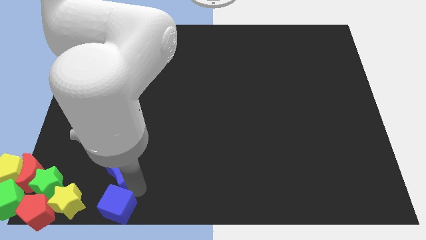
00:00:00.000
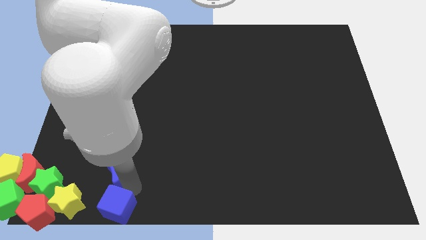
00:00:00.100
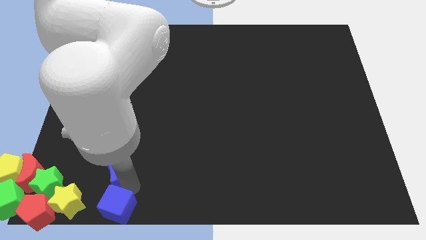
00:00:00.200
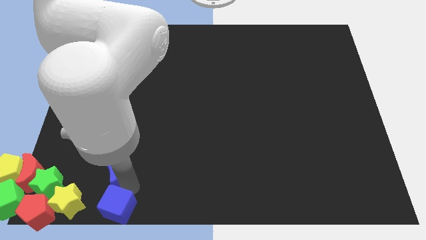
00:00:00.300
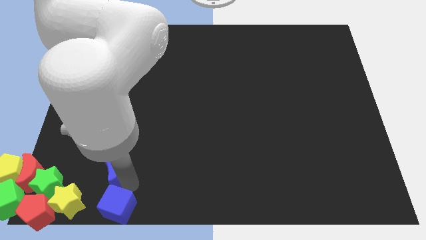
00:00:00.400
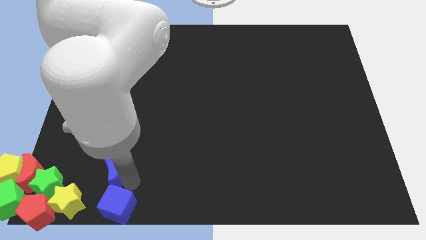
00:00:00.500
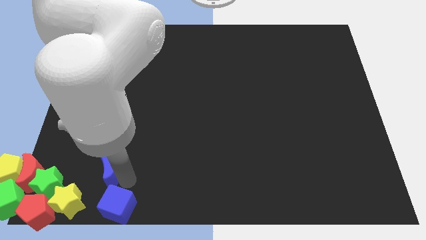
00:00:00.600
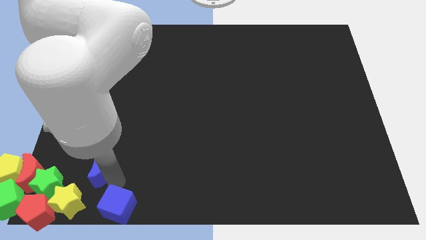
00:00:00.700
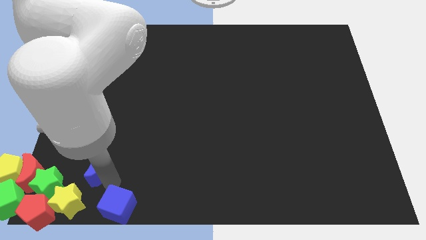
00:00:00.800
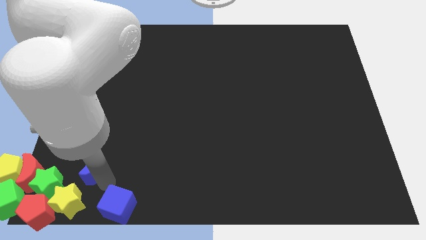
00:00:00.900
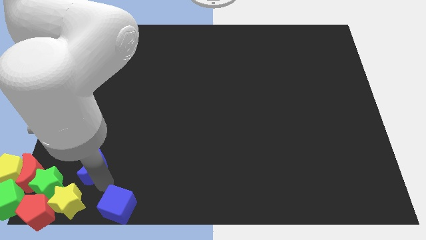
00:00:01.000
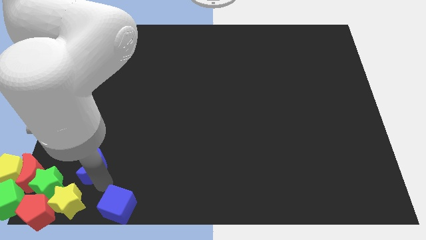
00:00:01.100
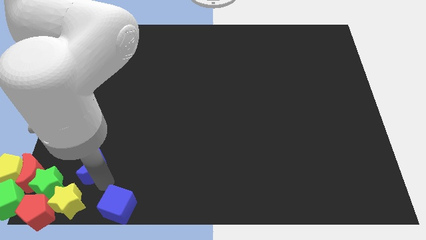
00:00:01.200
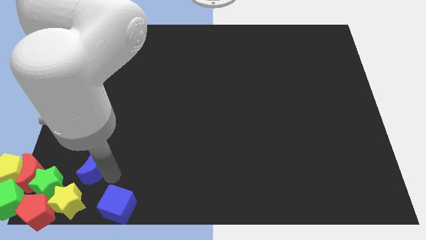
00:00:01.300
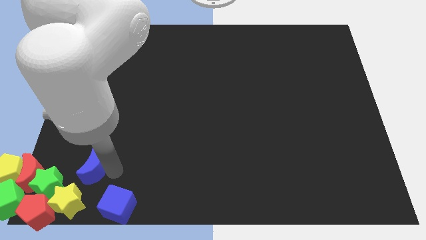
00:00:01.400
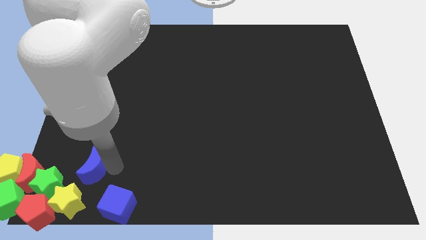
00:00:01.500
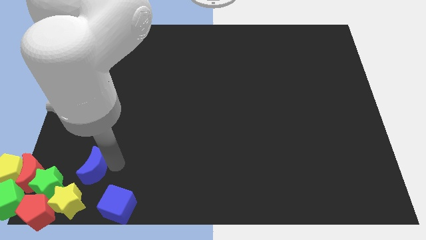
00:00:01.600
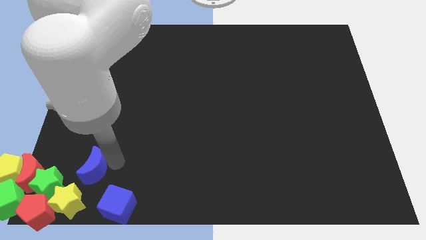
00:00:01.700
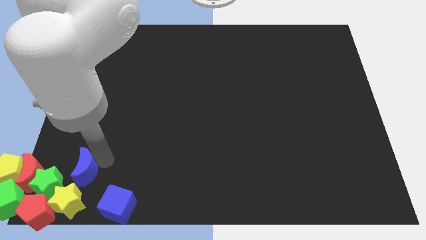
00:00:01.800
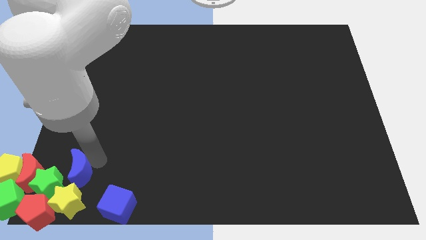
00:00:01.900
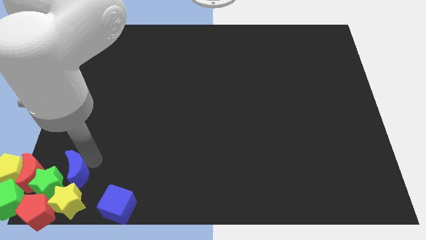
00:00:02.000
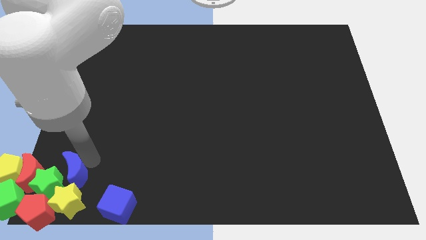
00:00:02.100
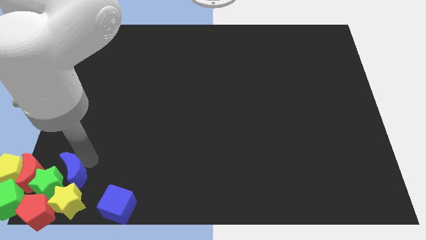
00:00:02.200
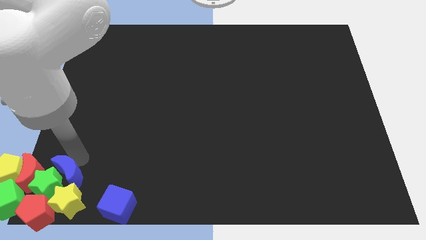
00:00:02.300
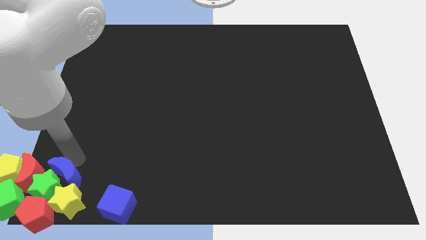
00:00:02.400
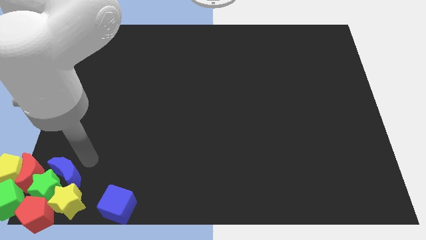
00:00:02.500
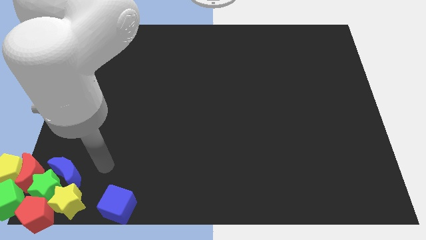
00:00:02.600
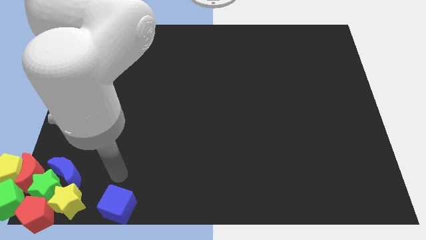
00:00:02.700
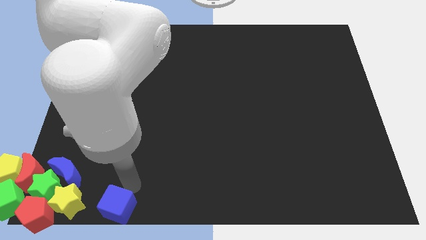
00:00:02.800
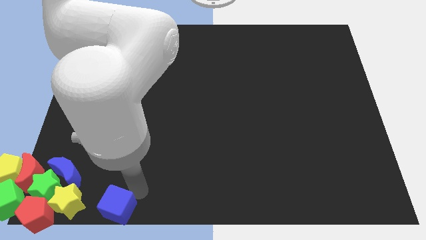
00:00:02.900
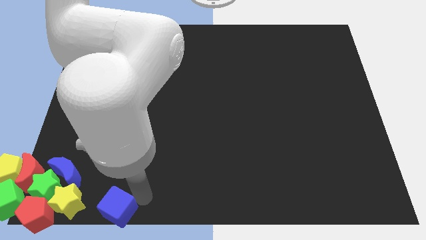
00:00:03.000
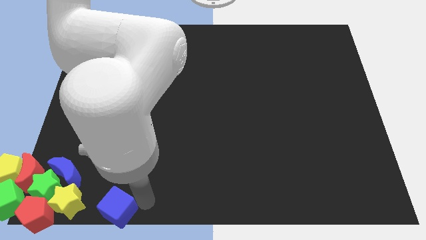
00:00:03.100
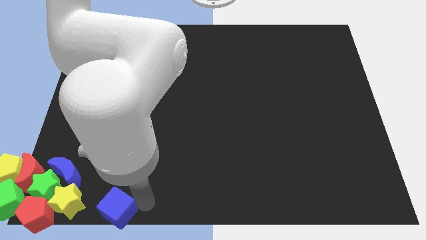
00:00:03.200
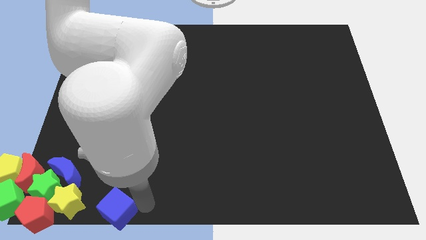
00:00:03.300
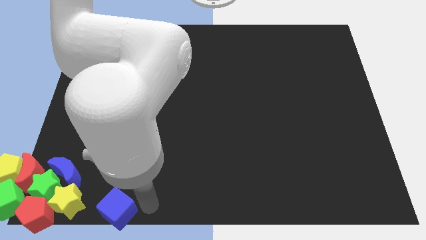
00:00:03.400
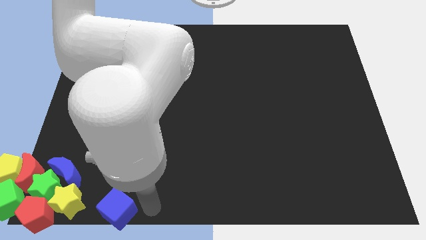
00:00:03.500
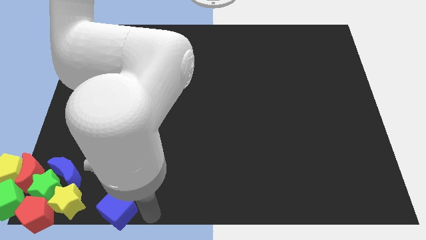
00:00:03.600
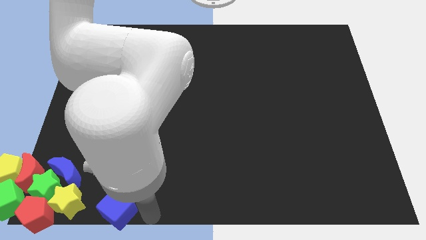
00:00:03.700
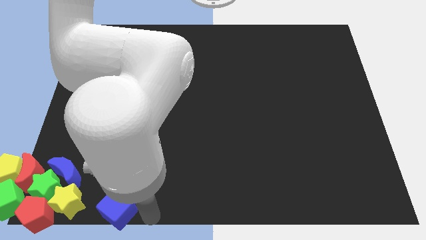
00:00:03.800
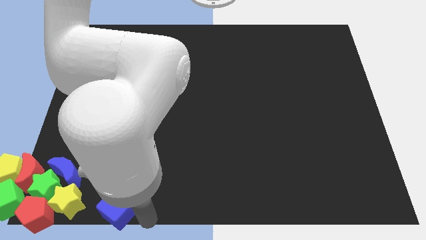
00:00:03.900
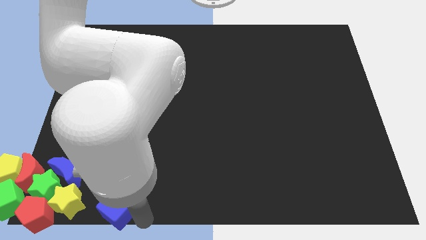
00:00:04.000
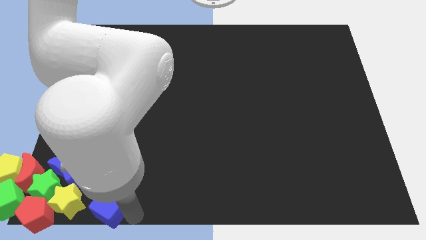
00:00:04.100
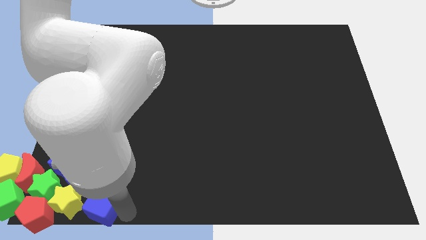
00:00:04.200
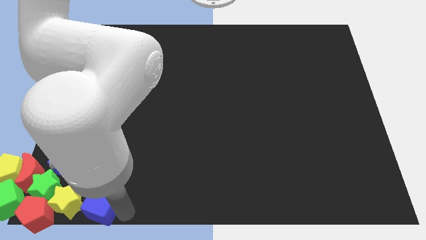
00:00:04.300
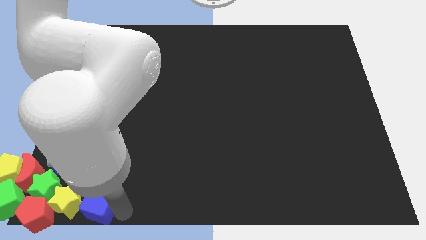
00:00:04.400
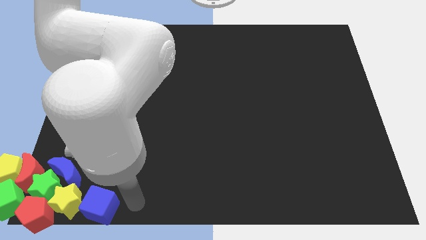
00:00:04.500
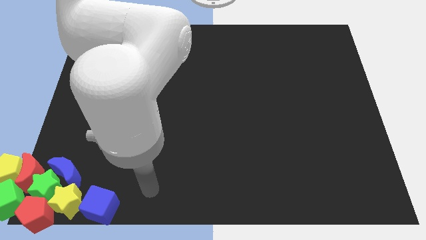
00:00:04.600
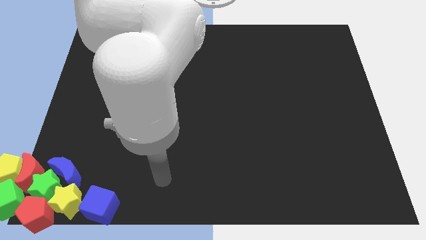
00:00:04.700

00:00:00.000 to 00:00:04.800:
move the two blue blocks into the group of blocks

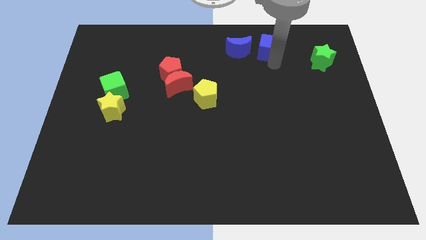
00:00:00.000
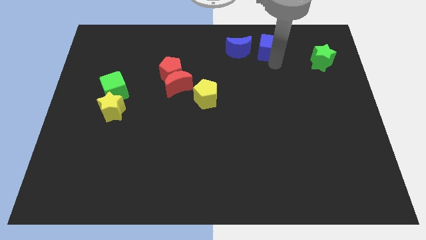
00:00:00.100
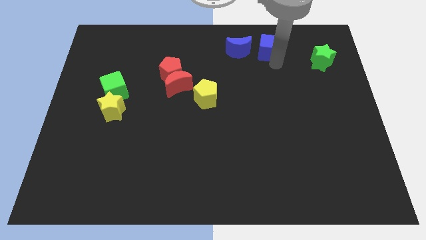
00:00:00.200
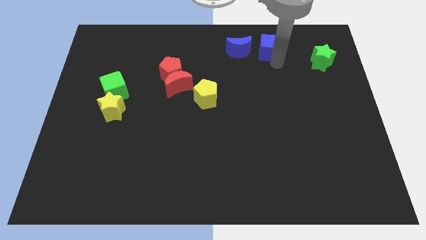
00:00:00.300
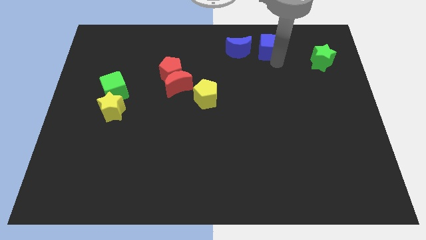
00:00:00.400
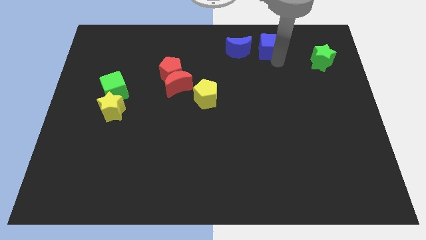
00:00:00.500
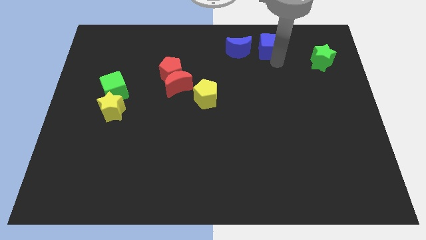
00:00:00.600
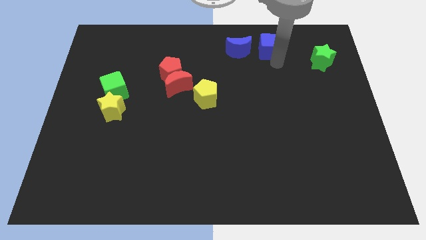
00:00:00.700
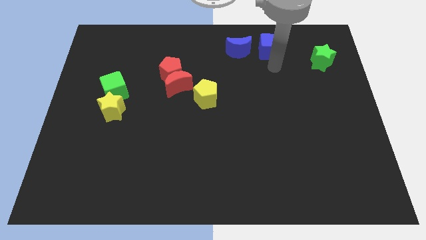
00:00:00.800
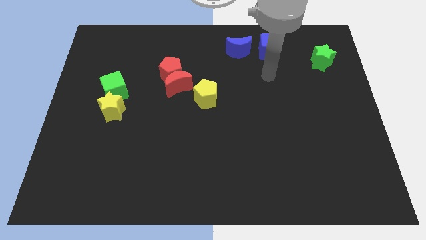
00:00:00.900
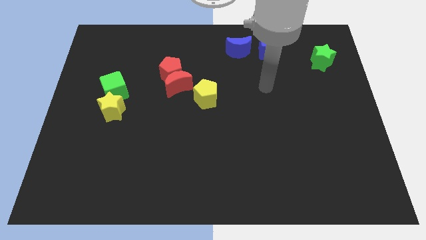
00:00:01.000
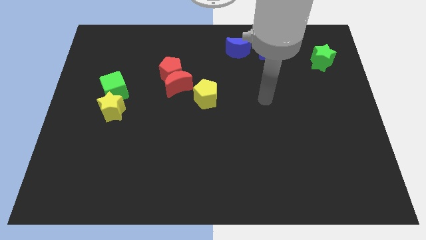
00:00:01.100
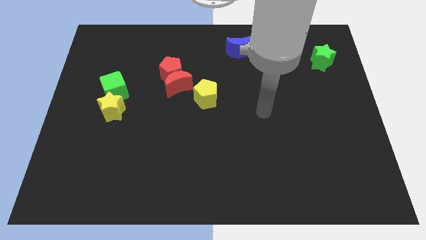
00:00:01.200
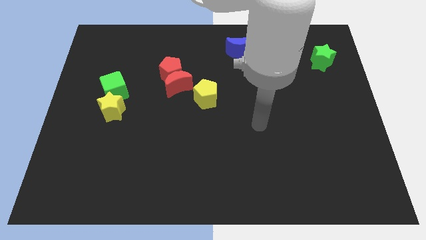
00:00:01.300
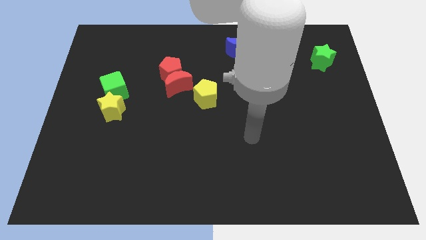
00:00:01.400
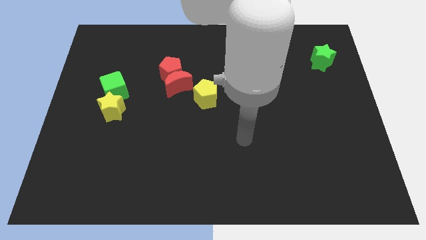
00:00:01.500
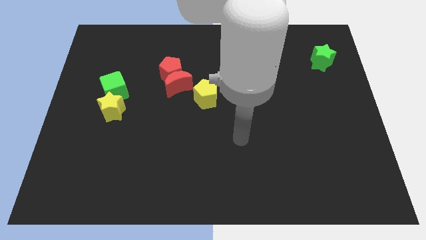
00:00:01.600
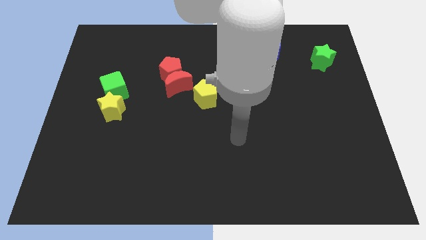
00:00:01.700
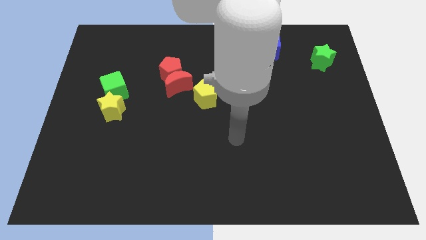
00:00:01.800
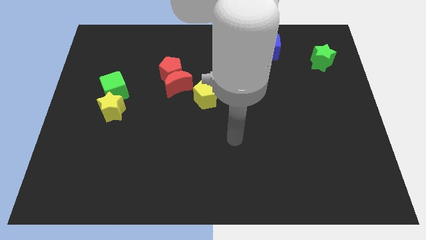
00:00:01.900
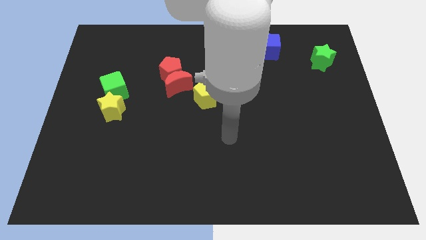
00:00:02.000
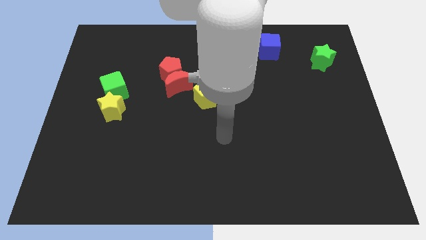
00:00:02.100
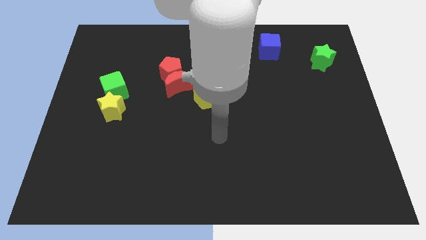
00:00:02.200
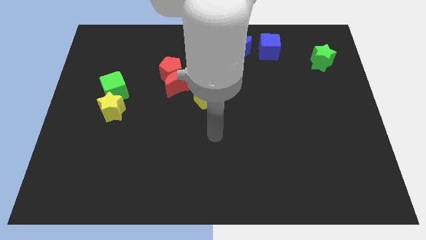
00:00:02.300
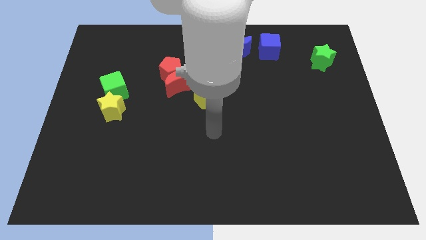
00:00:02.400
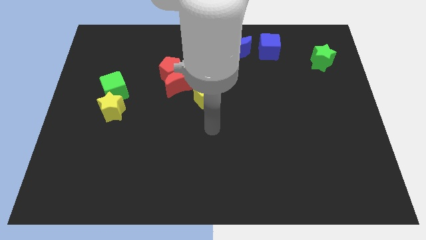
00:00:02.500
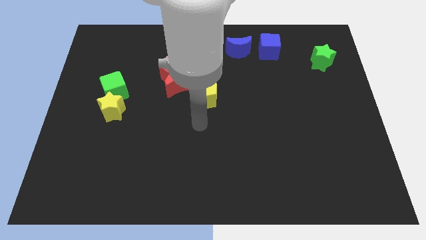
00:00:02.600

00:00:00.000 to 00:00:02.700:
move the arm towards the bottom of the yellow pentagon

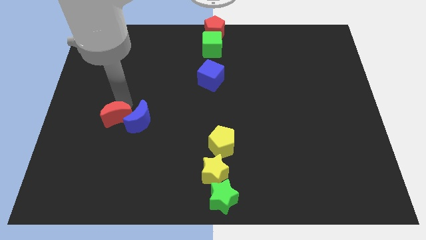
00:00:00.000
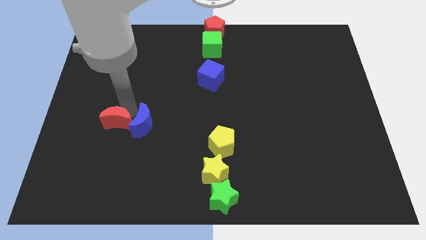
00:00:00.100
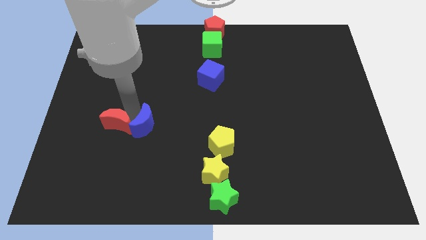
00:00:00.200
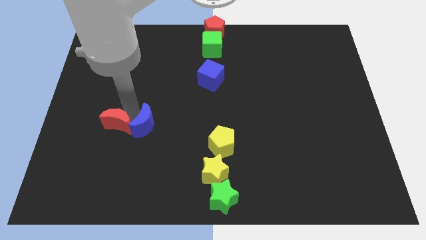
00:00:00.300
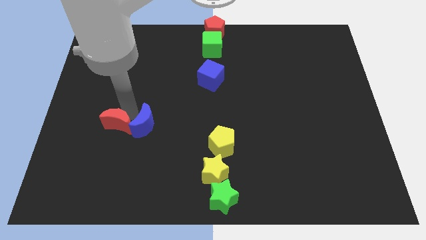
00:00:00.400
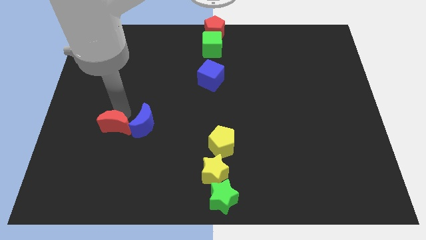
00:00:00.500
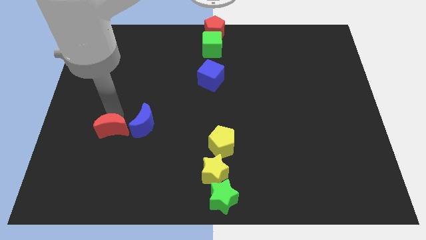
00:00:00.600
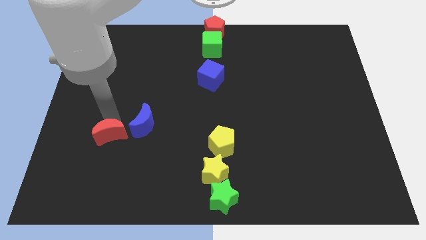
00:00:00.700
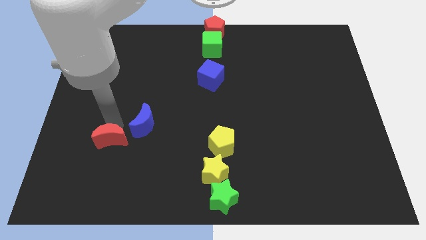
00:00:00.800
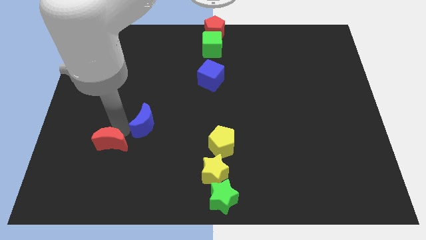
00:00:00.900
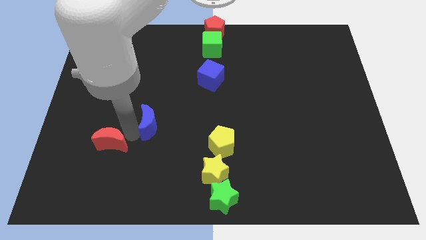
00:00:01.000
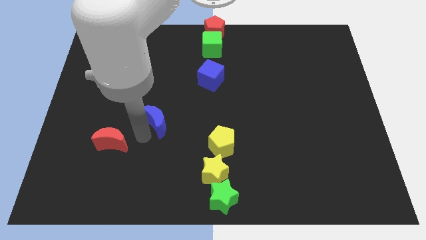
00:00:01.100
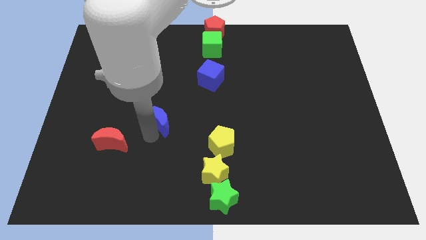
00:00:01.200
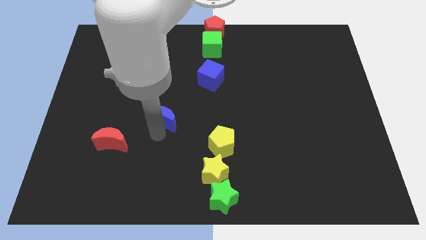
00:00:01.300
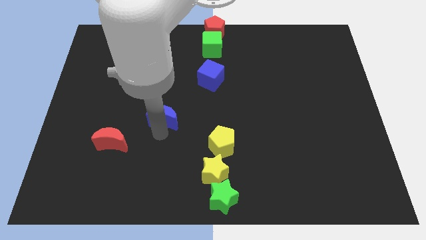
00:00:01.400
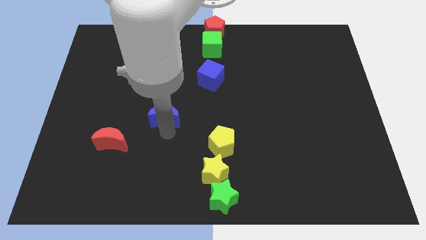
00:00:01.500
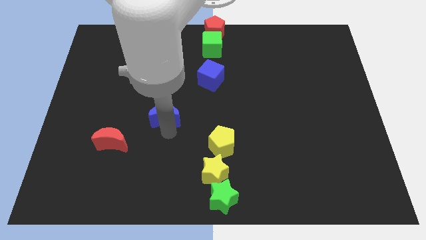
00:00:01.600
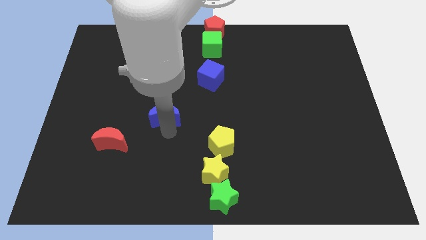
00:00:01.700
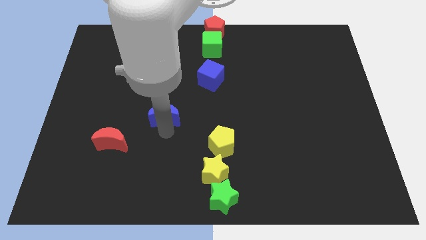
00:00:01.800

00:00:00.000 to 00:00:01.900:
separate blue moon from the red moon
